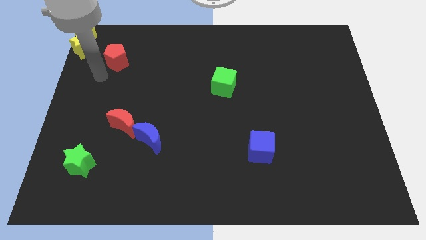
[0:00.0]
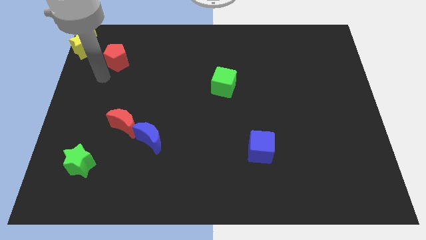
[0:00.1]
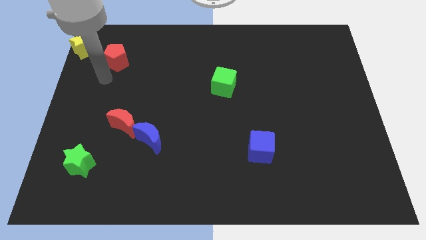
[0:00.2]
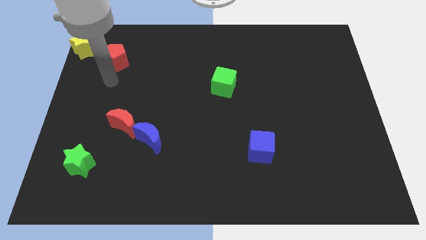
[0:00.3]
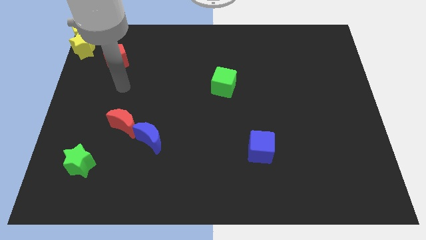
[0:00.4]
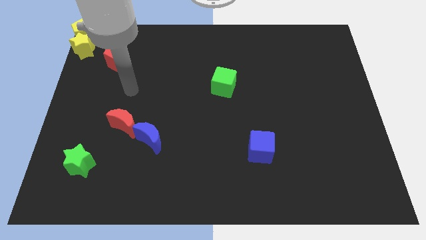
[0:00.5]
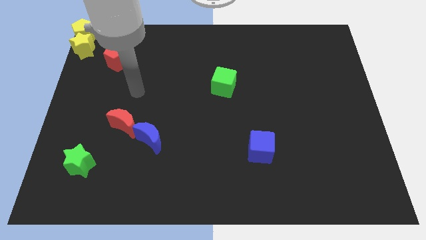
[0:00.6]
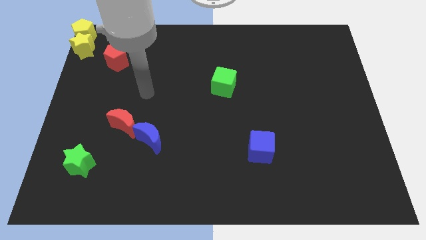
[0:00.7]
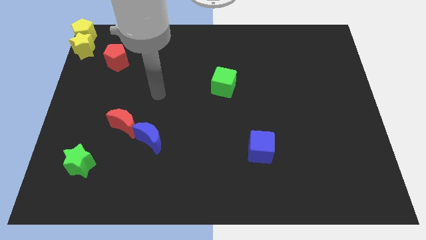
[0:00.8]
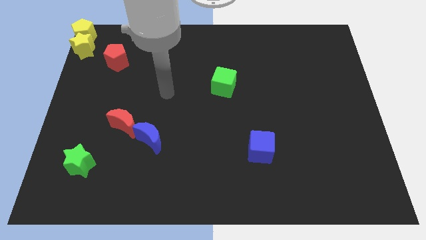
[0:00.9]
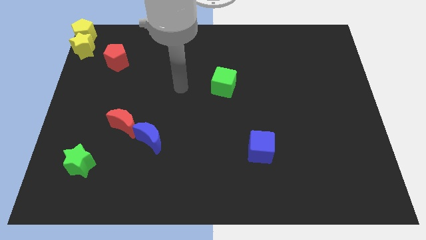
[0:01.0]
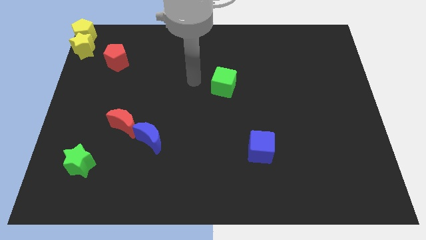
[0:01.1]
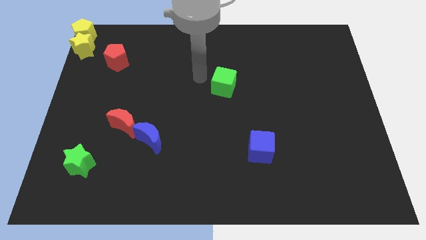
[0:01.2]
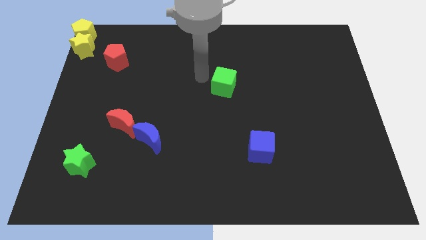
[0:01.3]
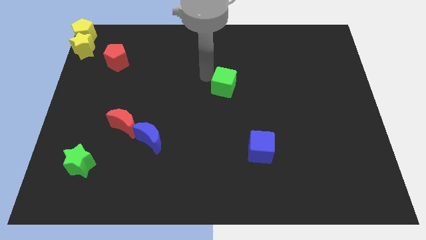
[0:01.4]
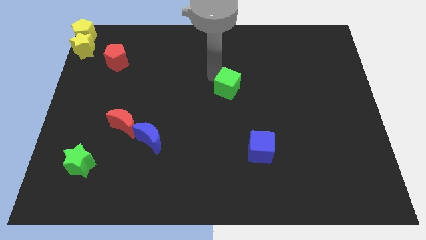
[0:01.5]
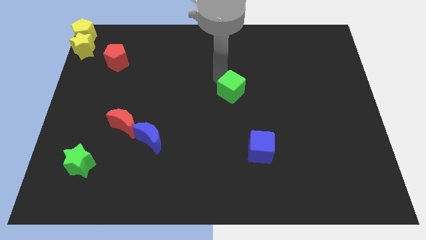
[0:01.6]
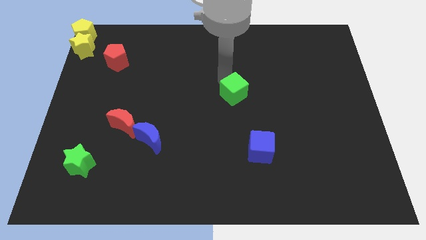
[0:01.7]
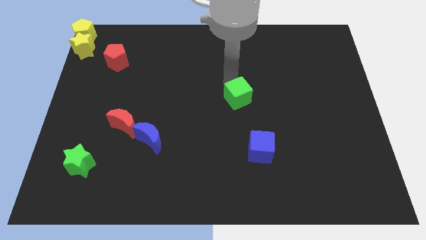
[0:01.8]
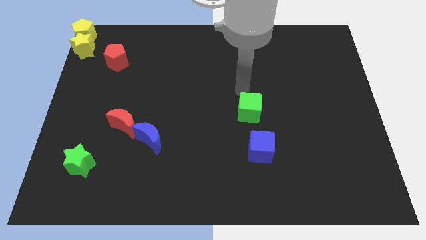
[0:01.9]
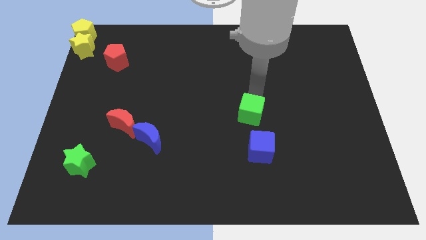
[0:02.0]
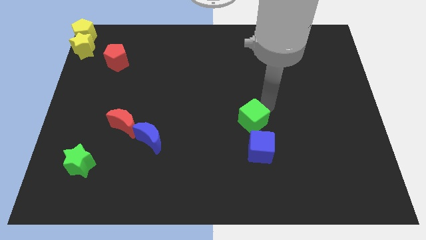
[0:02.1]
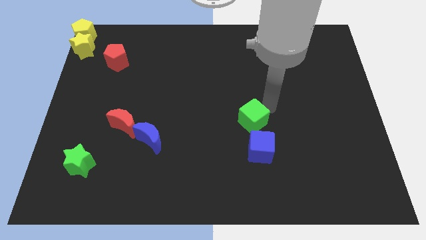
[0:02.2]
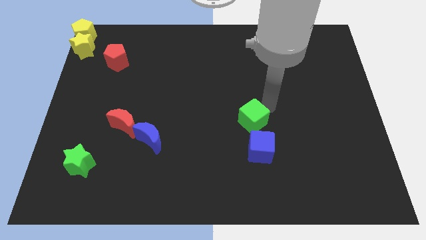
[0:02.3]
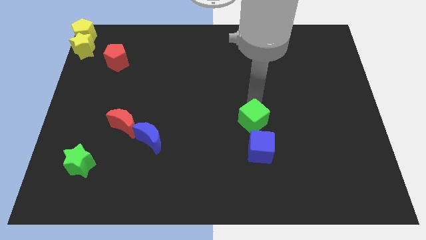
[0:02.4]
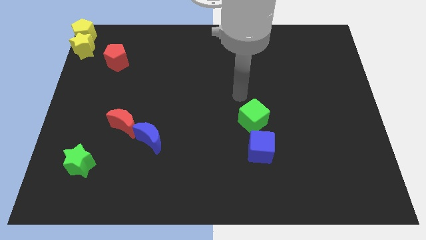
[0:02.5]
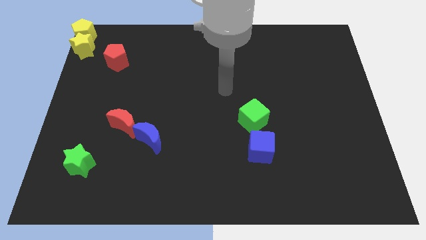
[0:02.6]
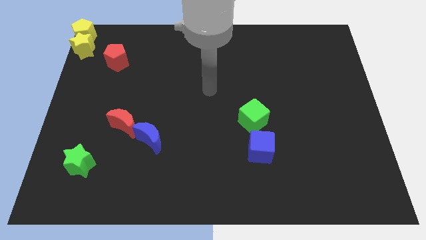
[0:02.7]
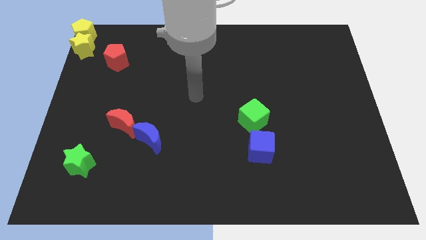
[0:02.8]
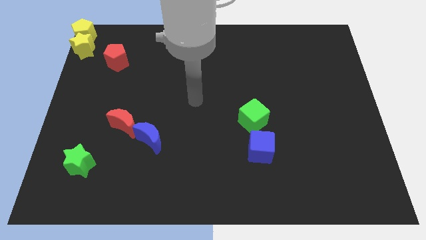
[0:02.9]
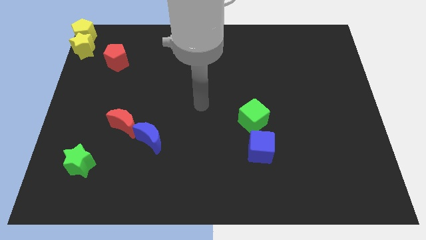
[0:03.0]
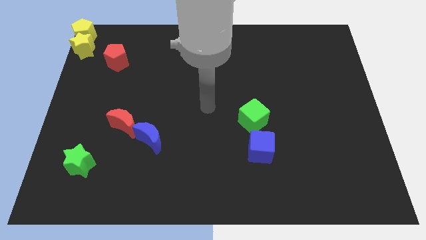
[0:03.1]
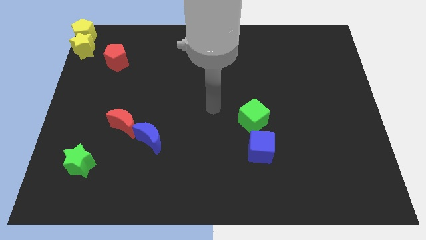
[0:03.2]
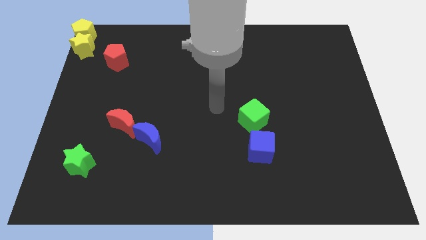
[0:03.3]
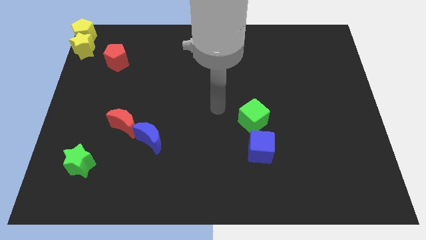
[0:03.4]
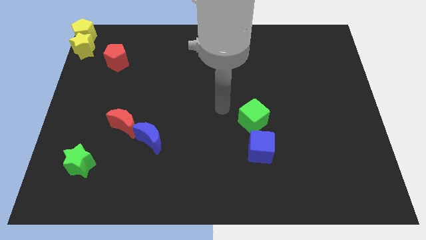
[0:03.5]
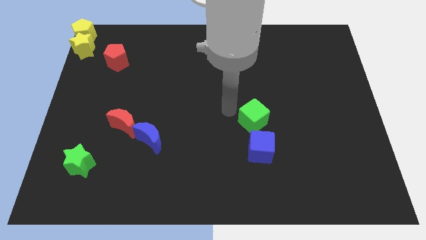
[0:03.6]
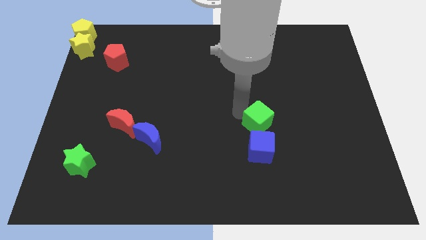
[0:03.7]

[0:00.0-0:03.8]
push the green cube into the blue cube

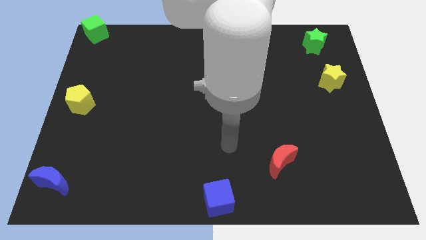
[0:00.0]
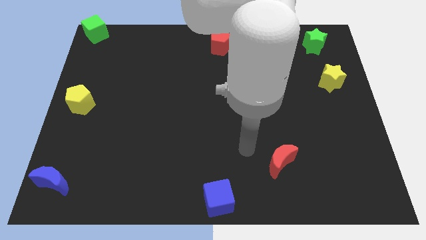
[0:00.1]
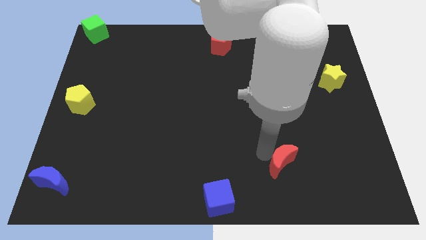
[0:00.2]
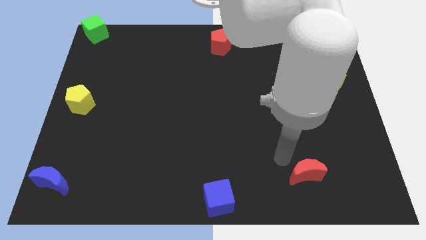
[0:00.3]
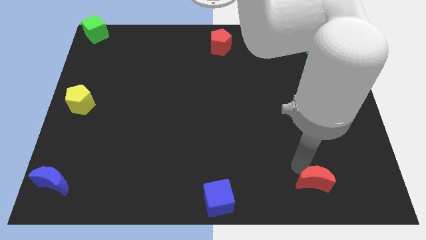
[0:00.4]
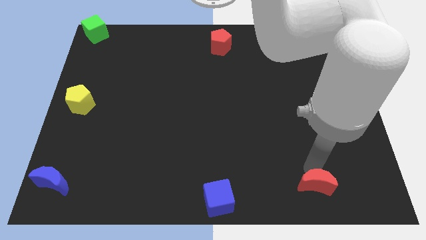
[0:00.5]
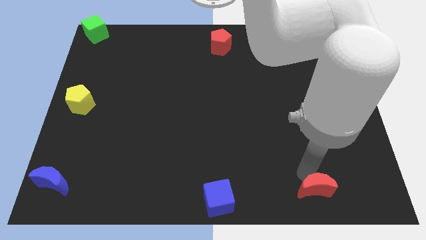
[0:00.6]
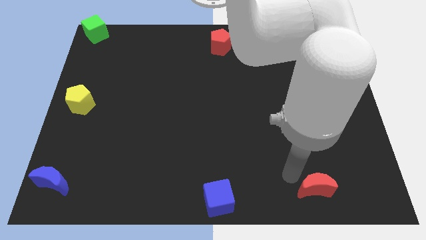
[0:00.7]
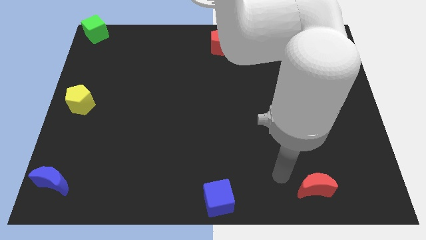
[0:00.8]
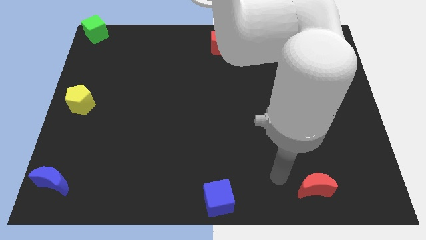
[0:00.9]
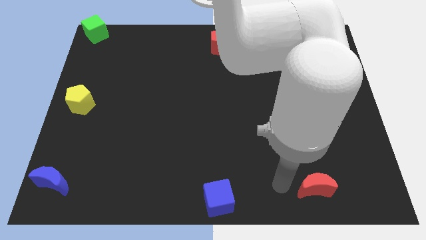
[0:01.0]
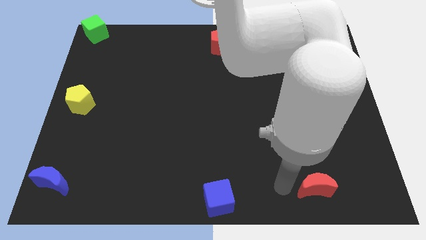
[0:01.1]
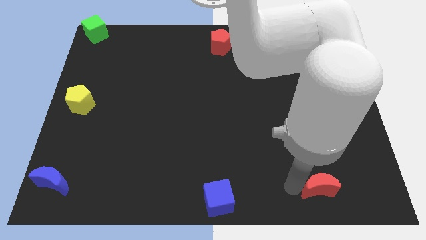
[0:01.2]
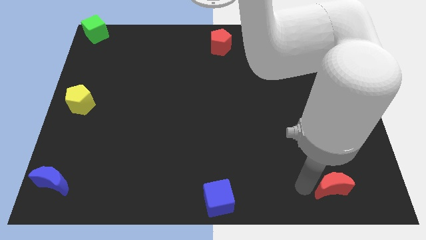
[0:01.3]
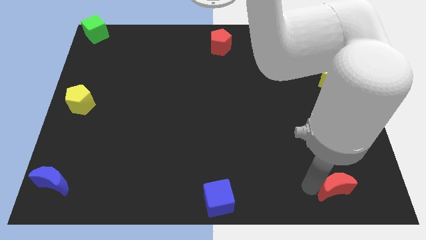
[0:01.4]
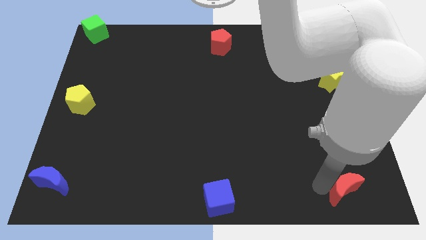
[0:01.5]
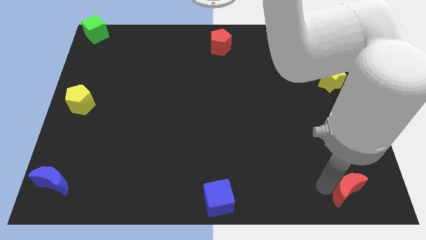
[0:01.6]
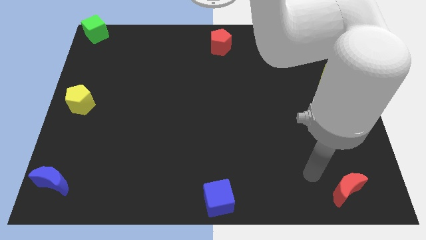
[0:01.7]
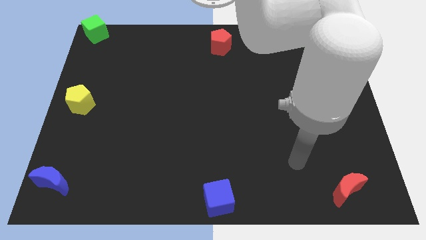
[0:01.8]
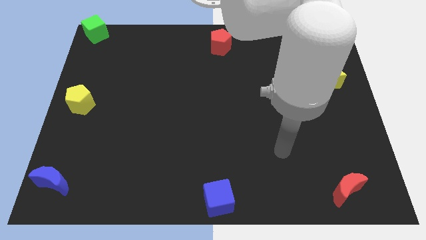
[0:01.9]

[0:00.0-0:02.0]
push red moon to the bottom right side of the board

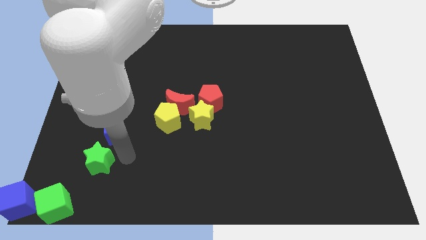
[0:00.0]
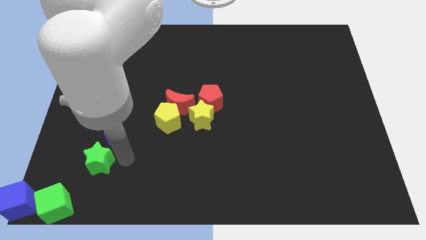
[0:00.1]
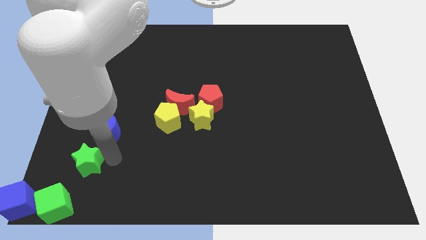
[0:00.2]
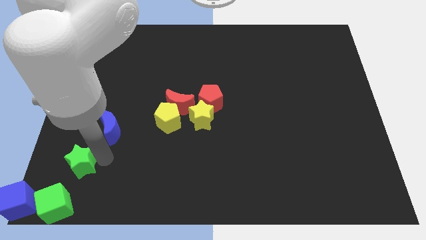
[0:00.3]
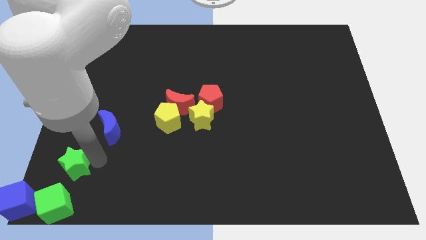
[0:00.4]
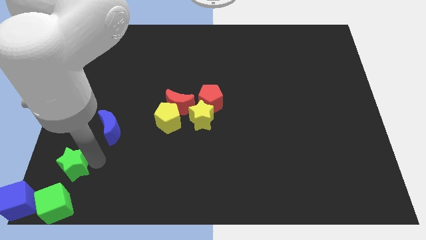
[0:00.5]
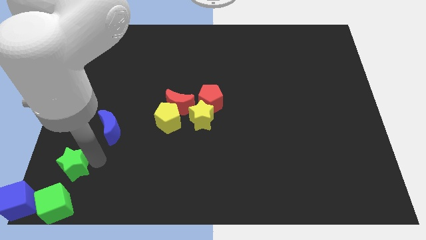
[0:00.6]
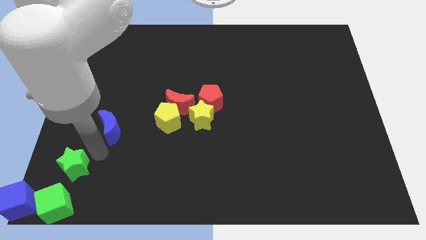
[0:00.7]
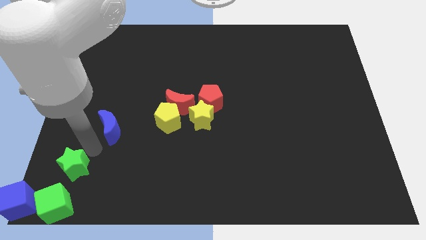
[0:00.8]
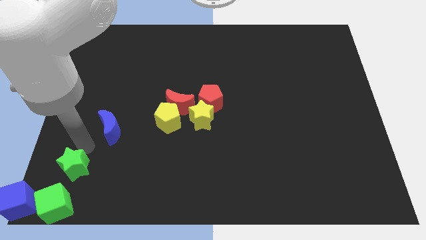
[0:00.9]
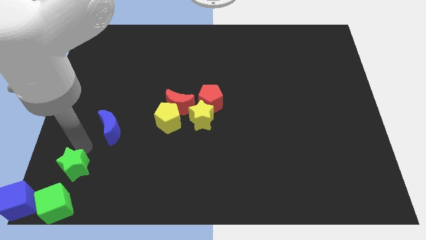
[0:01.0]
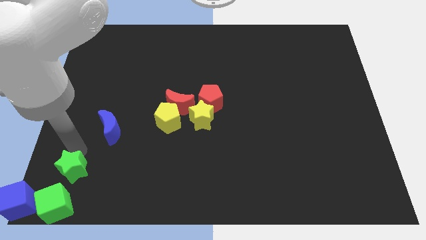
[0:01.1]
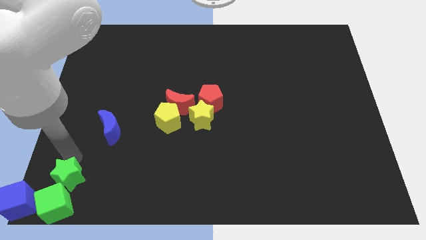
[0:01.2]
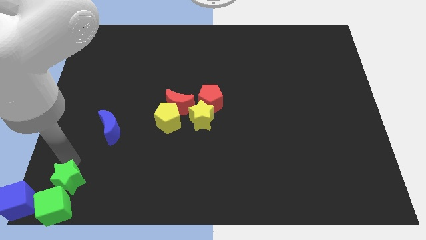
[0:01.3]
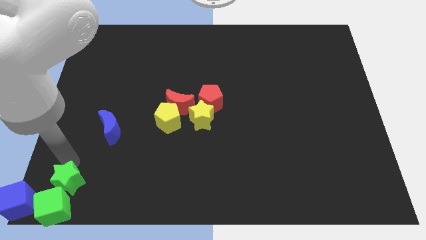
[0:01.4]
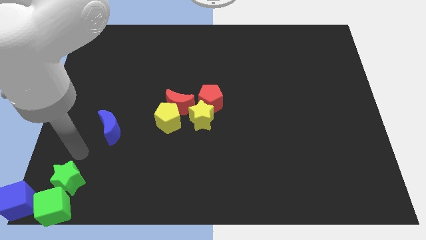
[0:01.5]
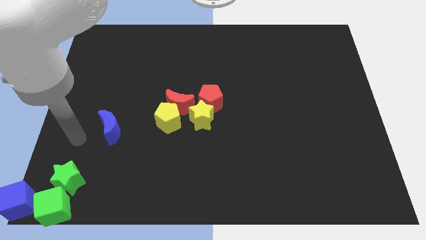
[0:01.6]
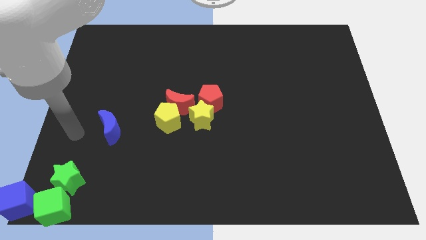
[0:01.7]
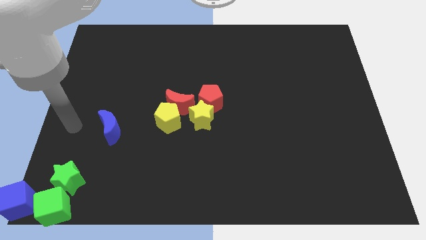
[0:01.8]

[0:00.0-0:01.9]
place the green star on the bottom of green cube

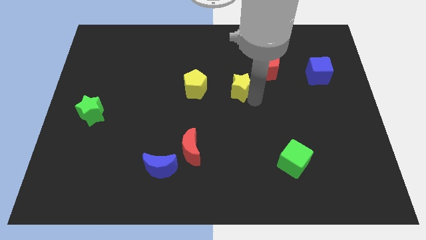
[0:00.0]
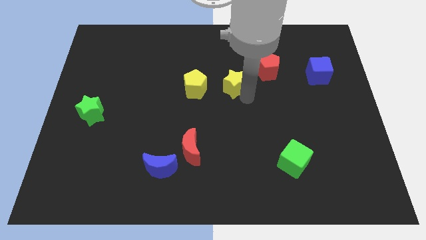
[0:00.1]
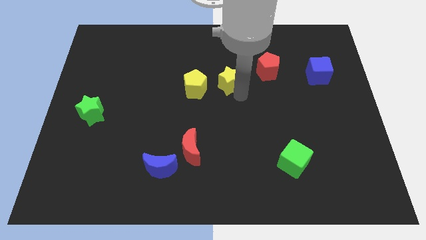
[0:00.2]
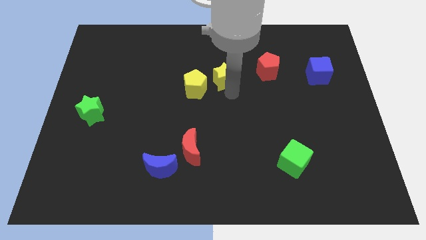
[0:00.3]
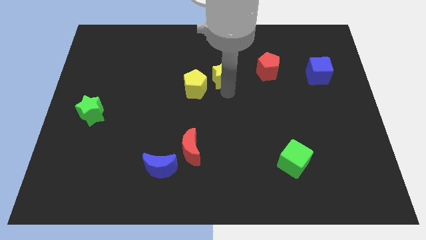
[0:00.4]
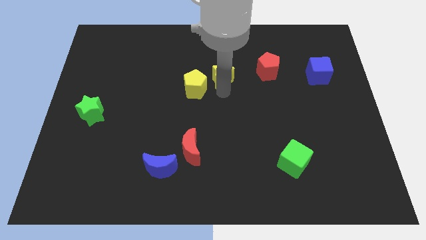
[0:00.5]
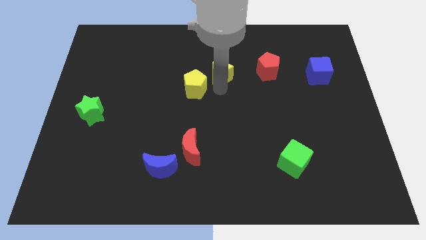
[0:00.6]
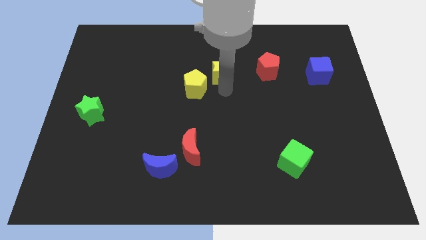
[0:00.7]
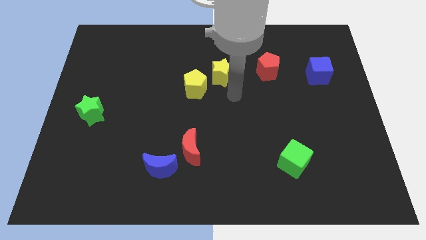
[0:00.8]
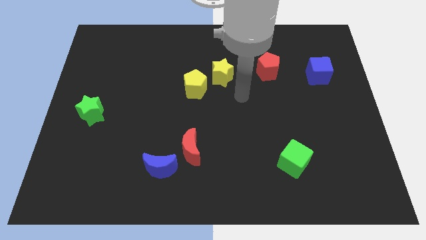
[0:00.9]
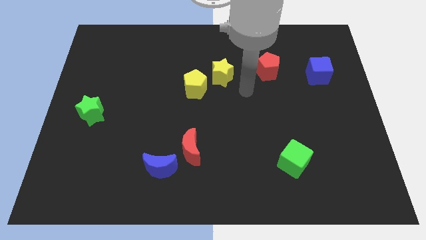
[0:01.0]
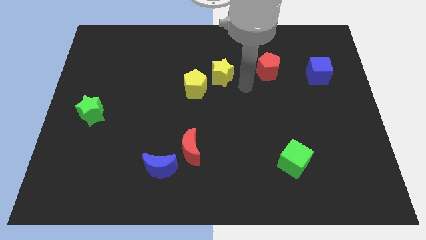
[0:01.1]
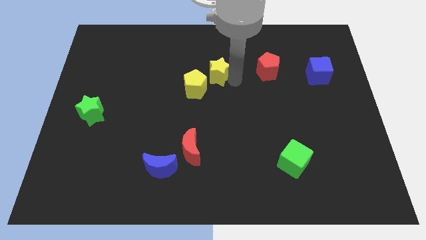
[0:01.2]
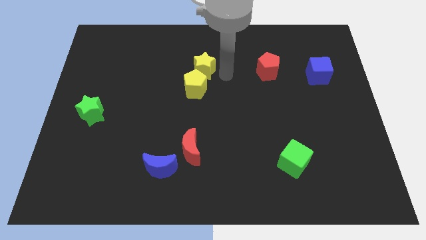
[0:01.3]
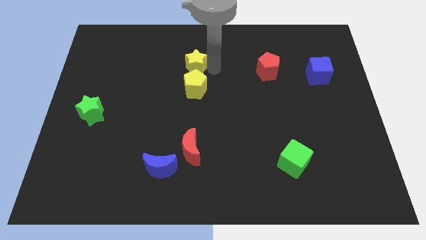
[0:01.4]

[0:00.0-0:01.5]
push yellow star to the top of yellow pentagon
